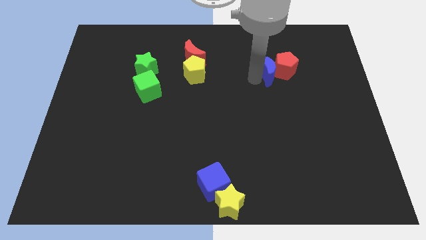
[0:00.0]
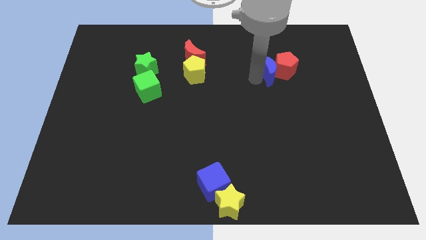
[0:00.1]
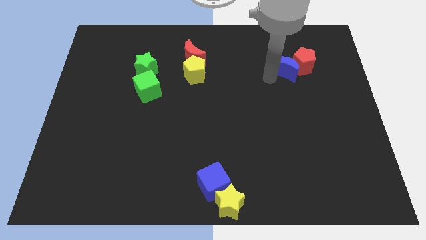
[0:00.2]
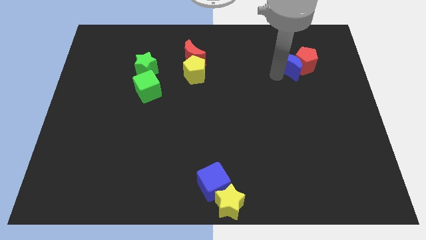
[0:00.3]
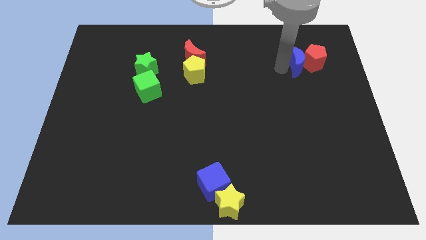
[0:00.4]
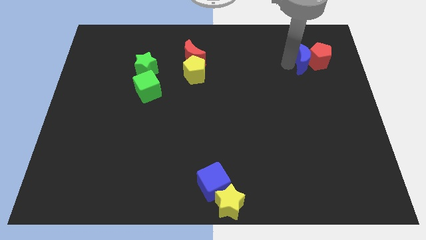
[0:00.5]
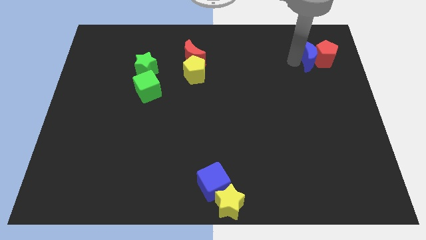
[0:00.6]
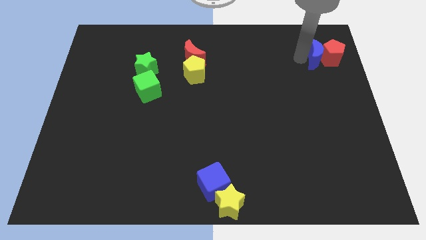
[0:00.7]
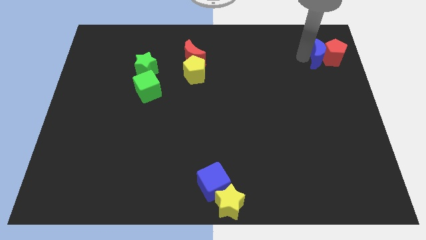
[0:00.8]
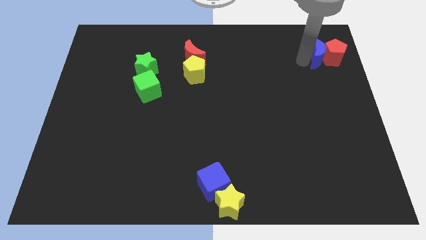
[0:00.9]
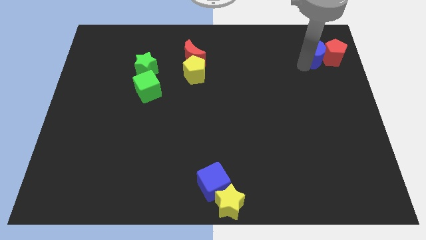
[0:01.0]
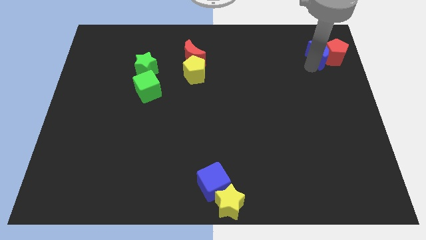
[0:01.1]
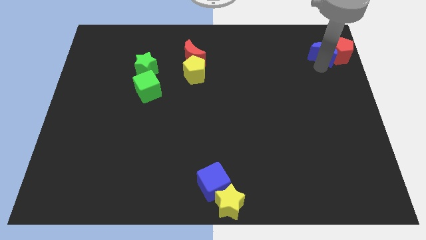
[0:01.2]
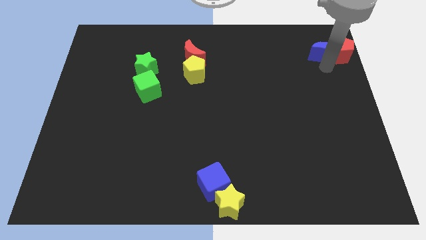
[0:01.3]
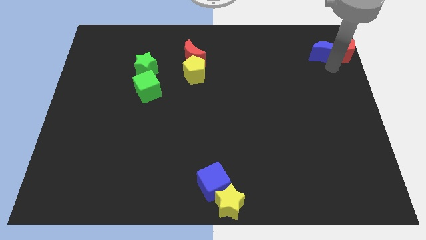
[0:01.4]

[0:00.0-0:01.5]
slide the blue crescent and red pentagon towards the top right corner of the board

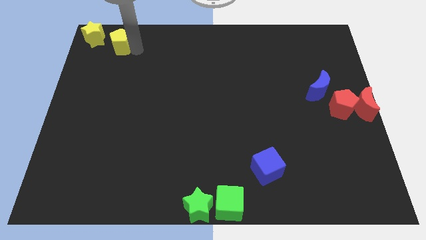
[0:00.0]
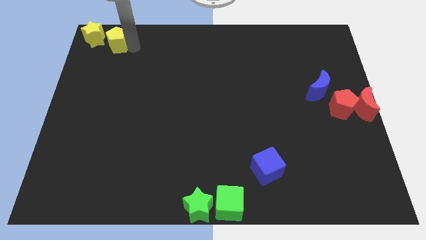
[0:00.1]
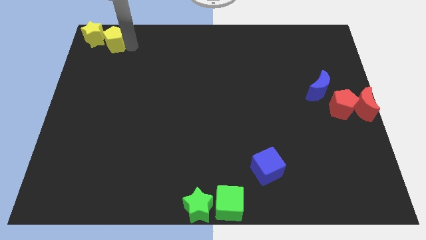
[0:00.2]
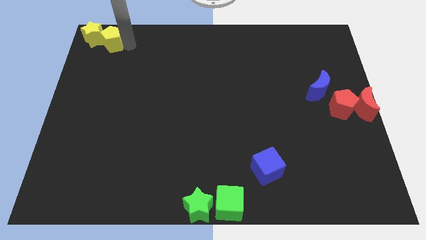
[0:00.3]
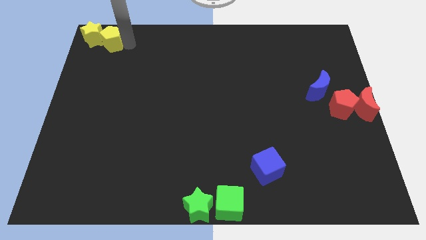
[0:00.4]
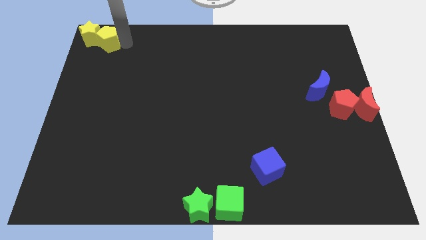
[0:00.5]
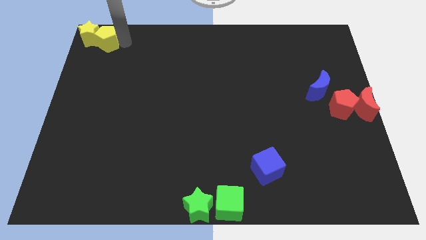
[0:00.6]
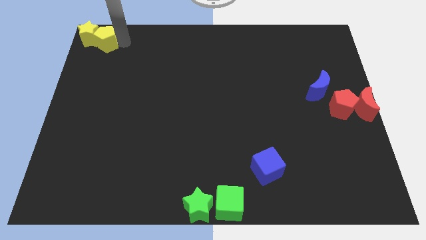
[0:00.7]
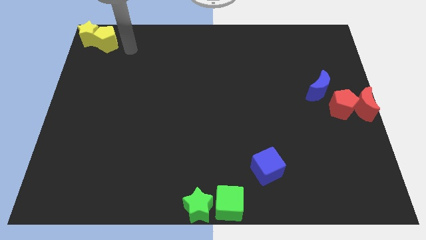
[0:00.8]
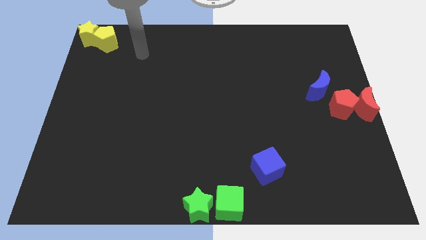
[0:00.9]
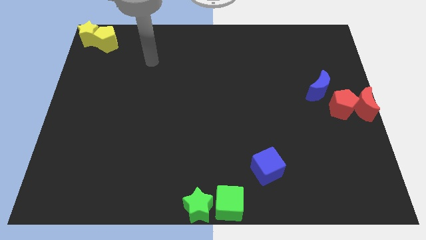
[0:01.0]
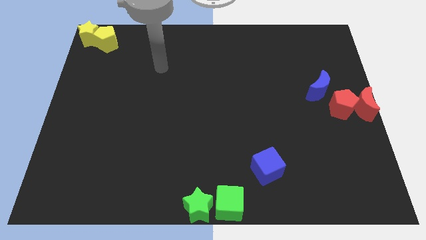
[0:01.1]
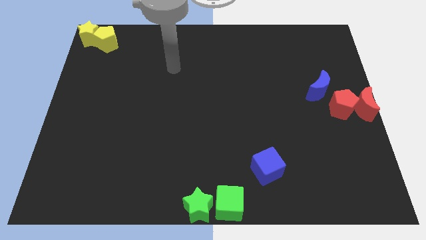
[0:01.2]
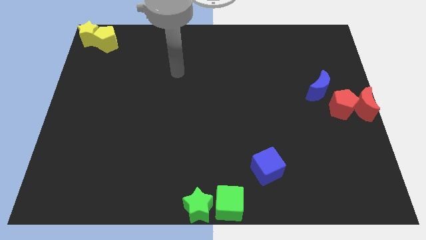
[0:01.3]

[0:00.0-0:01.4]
move the yellow blocks to the top left corner

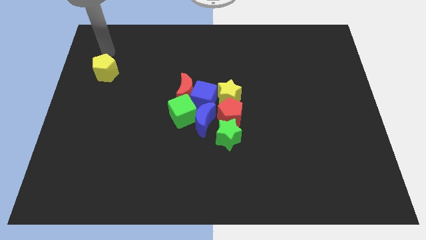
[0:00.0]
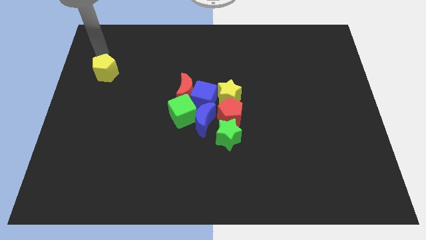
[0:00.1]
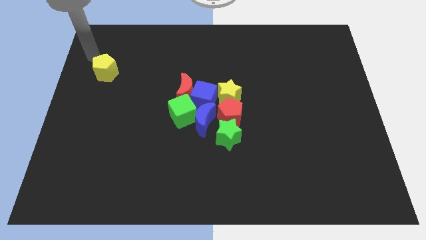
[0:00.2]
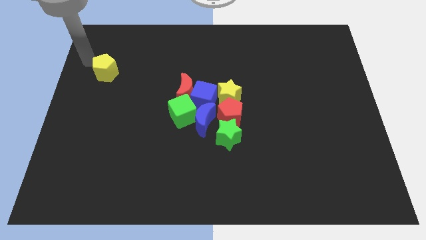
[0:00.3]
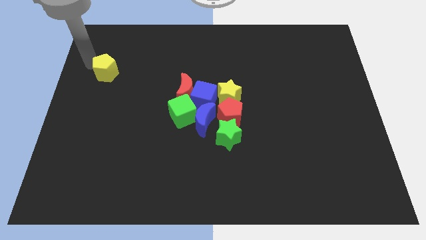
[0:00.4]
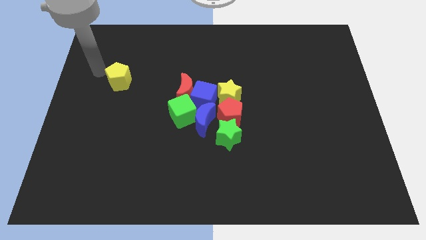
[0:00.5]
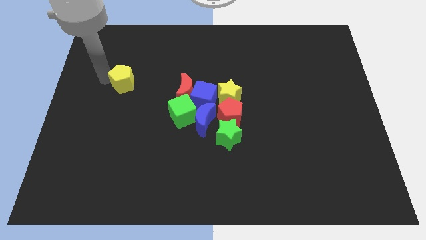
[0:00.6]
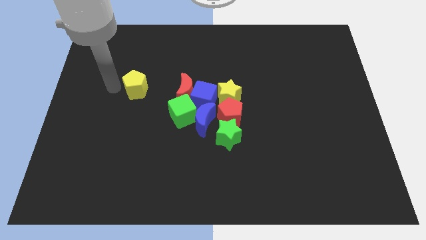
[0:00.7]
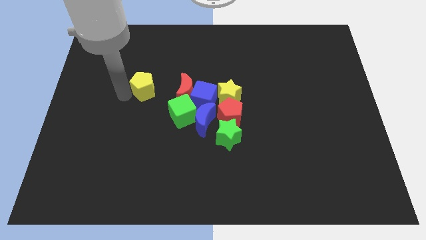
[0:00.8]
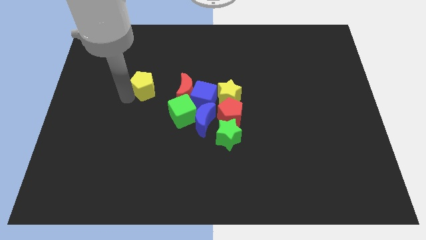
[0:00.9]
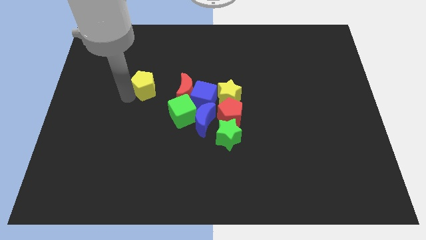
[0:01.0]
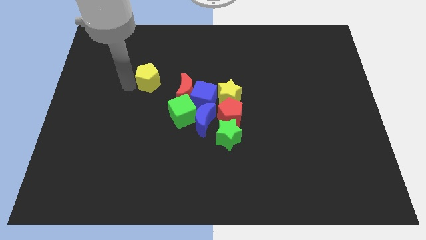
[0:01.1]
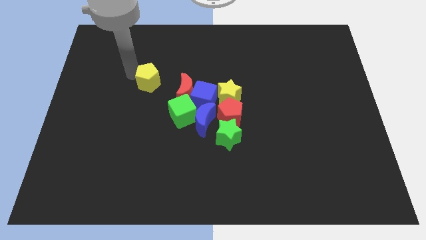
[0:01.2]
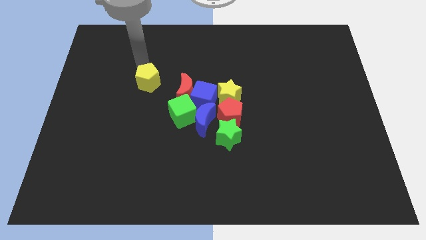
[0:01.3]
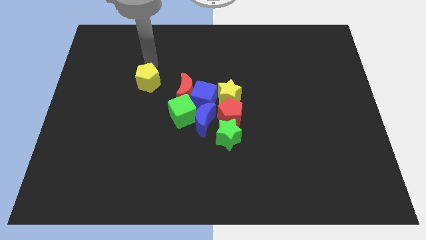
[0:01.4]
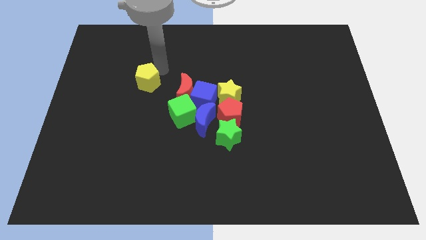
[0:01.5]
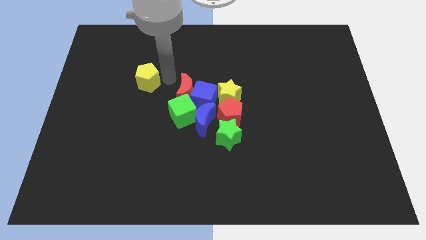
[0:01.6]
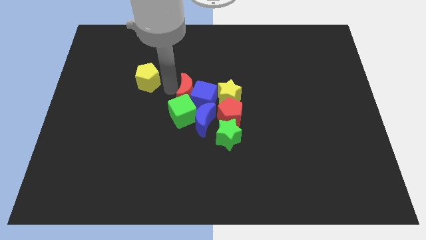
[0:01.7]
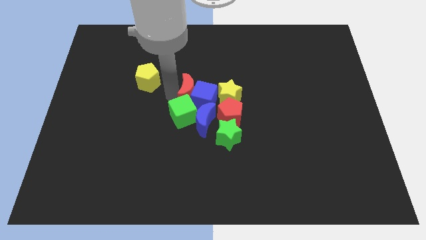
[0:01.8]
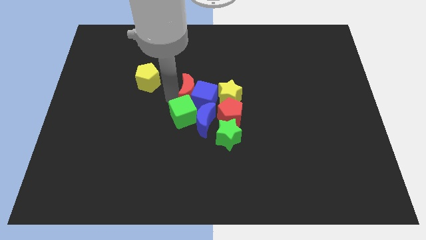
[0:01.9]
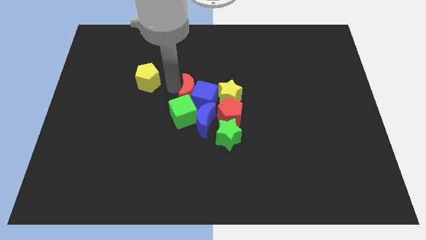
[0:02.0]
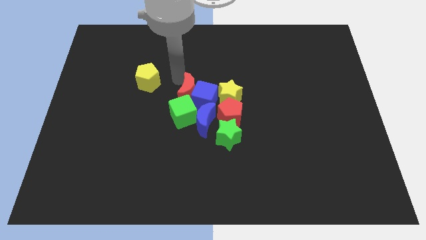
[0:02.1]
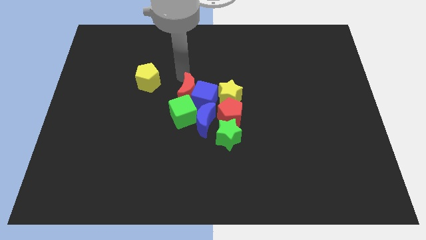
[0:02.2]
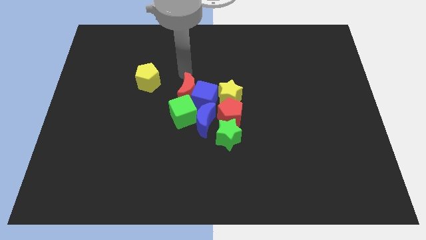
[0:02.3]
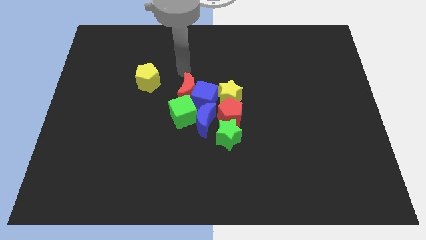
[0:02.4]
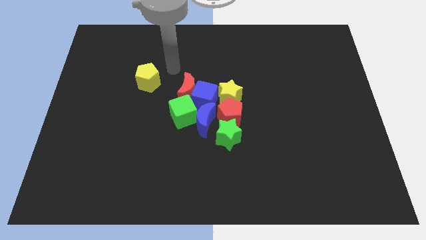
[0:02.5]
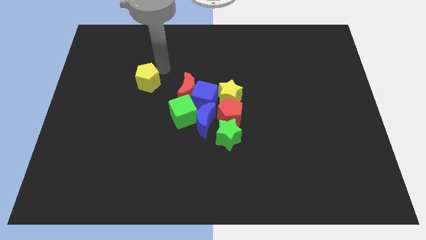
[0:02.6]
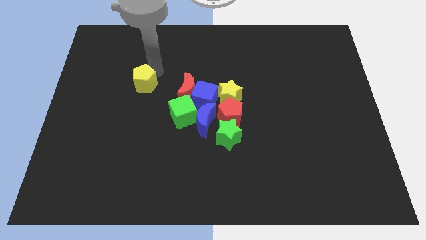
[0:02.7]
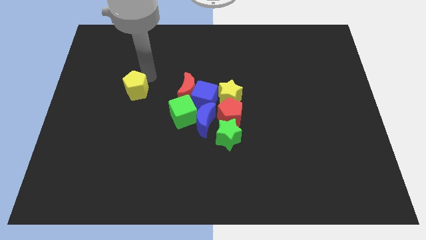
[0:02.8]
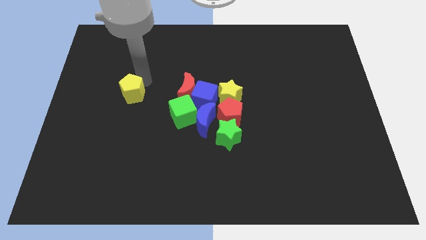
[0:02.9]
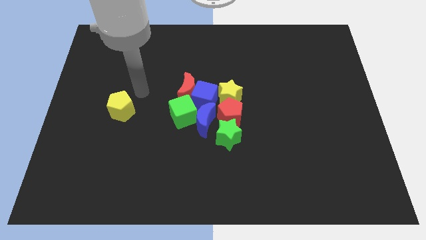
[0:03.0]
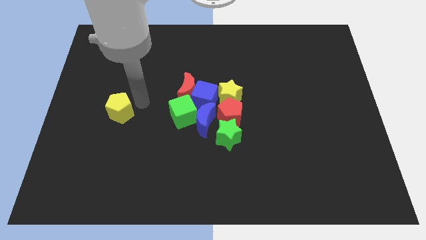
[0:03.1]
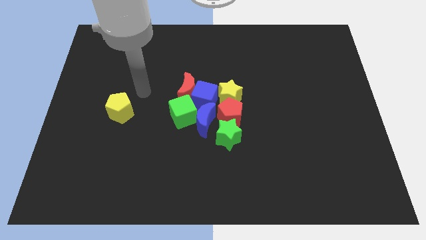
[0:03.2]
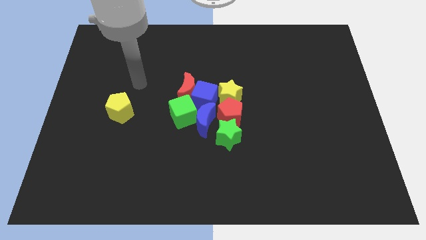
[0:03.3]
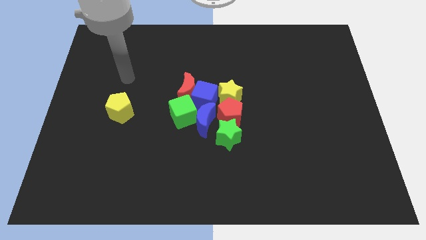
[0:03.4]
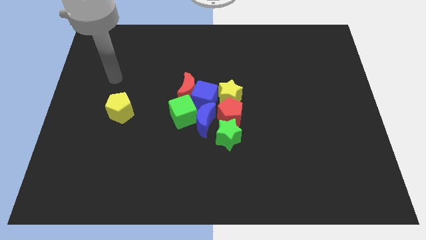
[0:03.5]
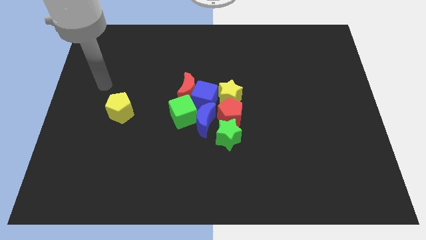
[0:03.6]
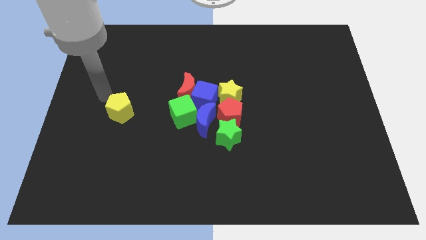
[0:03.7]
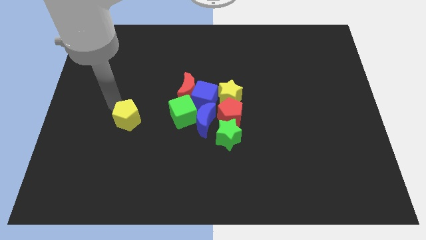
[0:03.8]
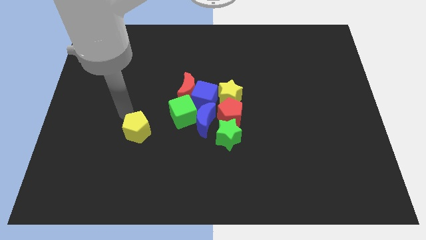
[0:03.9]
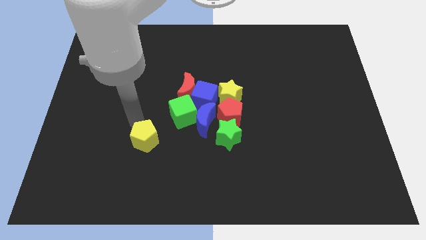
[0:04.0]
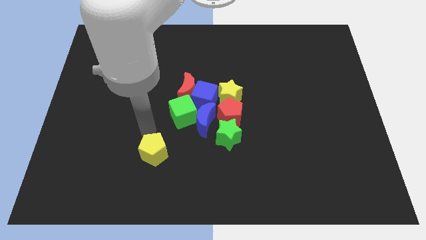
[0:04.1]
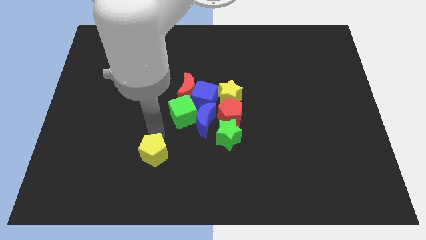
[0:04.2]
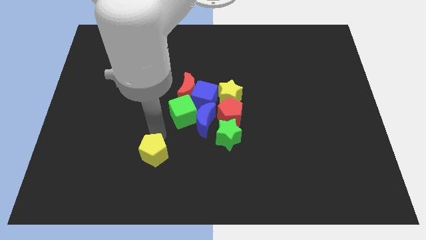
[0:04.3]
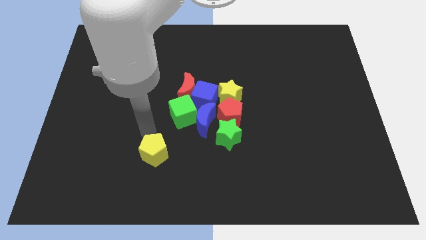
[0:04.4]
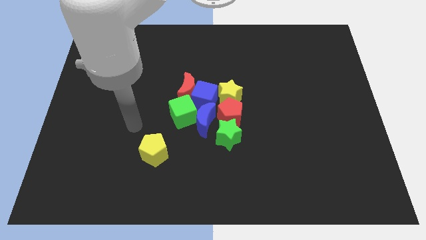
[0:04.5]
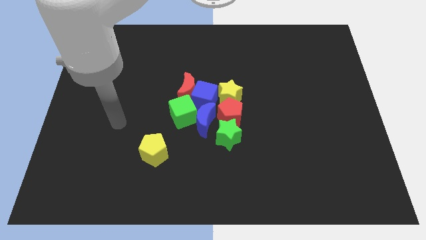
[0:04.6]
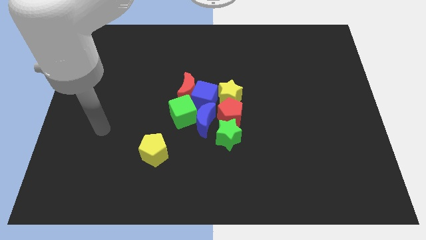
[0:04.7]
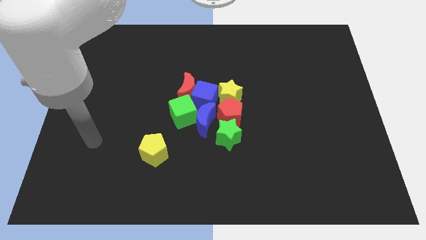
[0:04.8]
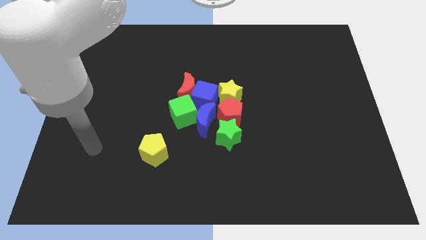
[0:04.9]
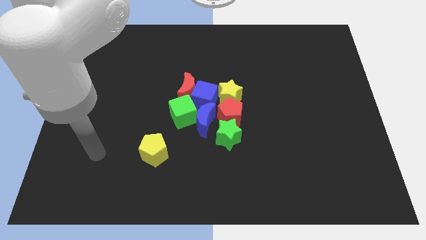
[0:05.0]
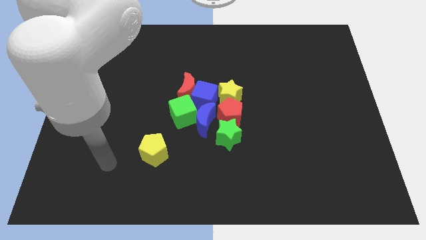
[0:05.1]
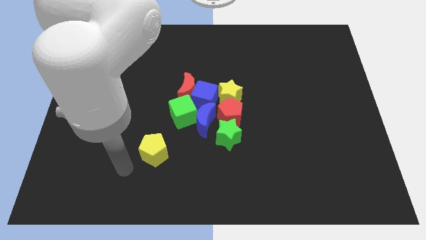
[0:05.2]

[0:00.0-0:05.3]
move the yellow pentagon to left of green cube

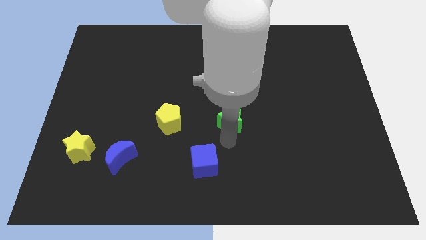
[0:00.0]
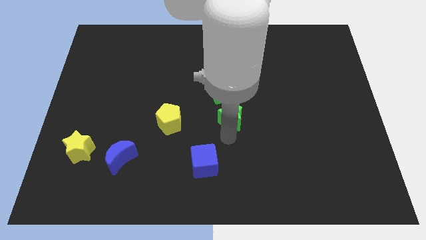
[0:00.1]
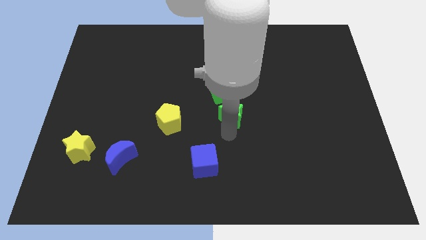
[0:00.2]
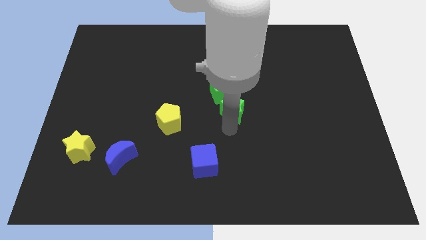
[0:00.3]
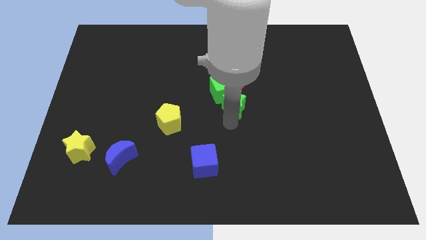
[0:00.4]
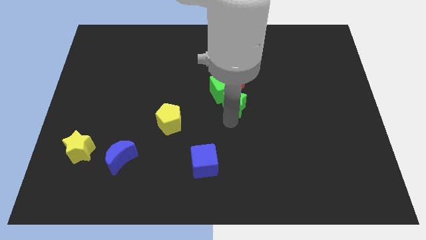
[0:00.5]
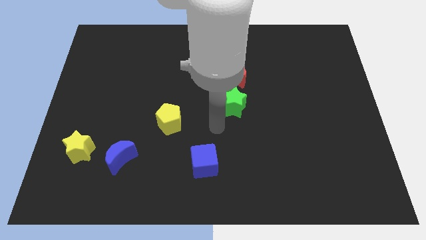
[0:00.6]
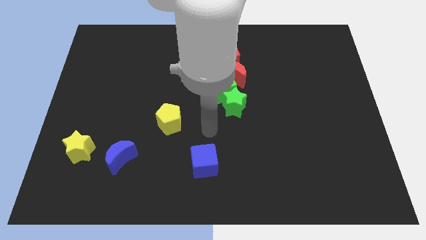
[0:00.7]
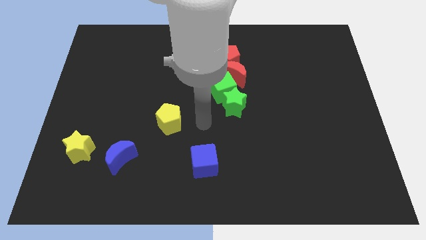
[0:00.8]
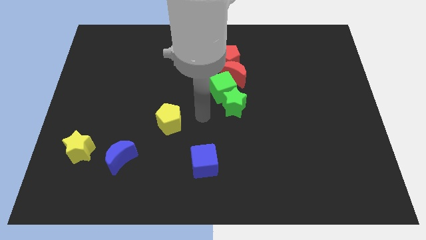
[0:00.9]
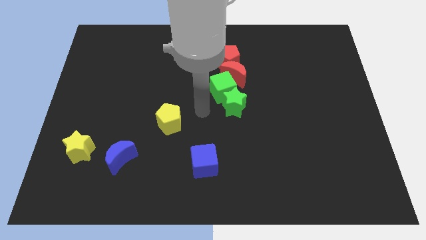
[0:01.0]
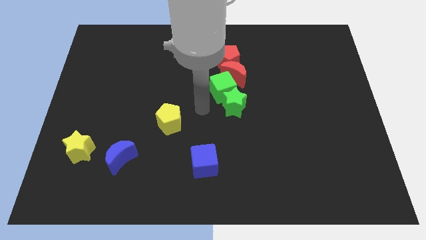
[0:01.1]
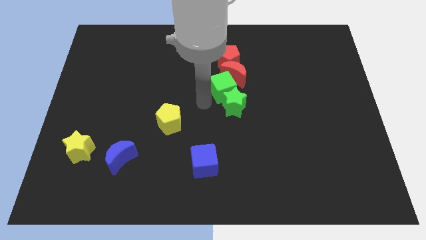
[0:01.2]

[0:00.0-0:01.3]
push the green star into the green cube
